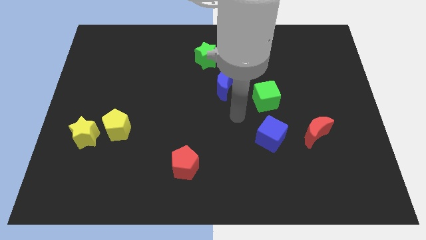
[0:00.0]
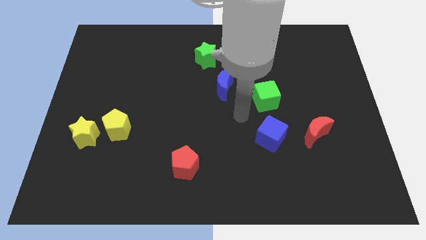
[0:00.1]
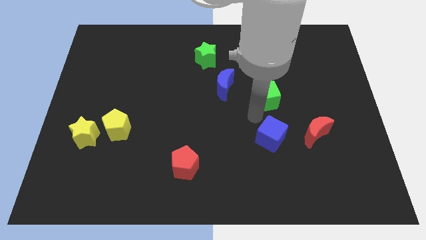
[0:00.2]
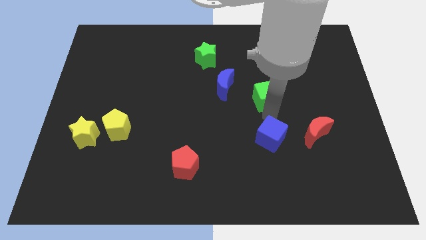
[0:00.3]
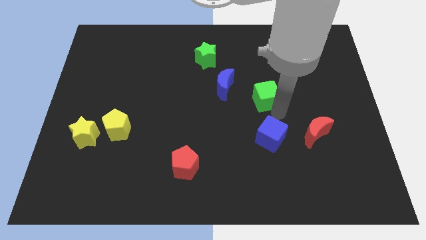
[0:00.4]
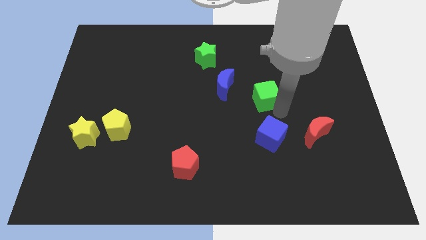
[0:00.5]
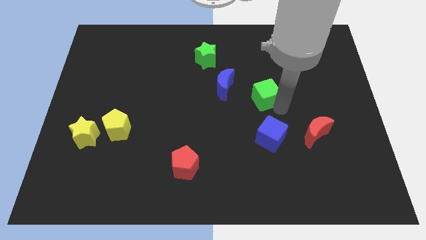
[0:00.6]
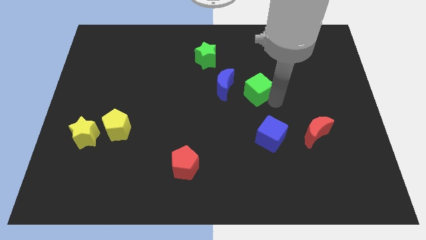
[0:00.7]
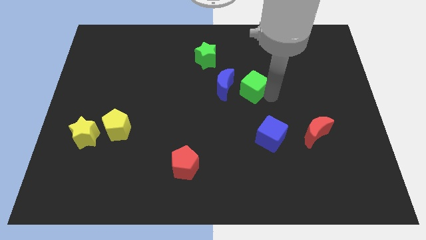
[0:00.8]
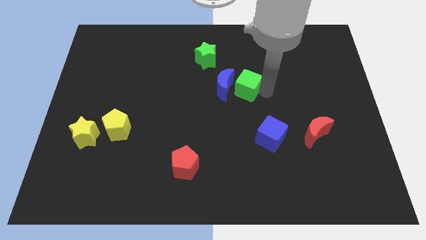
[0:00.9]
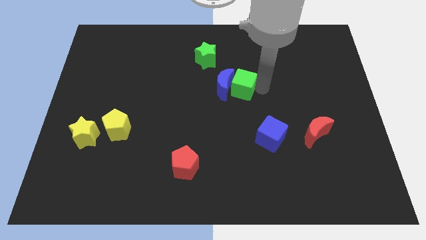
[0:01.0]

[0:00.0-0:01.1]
push the green cube into the blue crescent

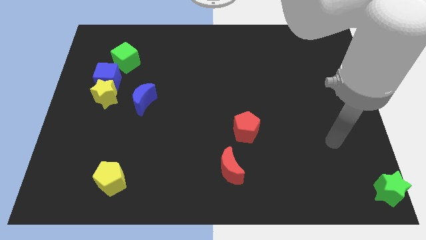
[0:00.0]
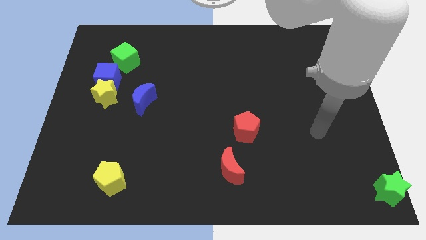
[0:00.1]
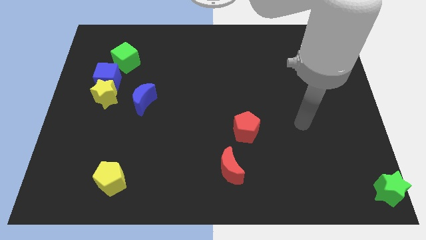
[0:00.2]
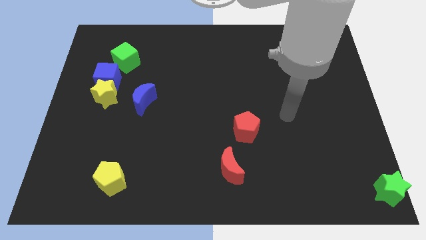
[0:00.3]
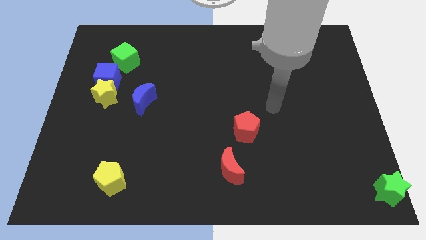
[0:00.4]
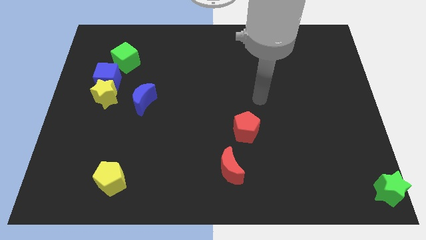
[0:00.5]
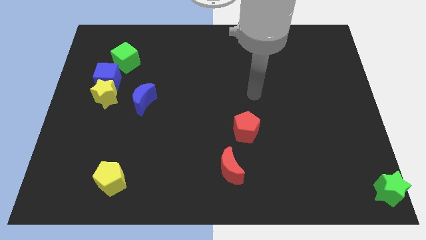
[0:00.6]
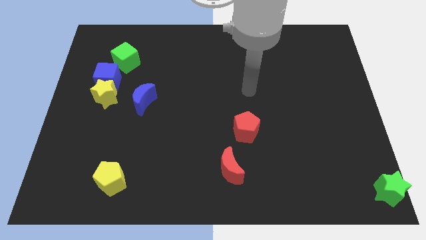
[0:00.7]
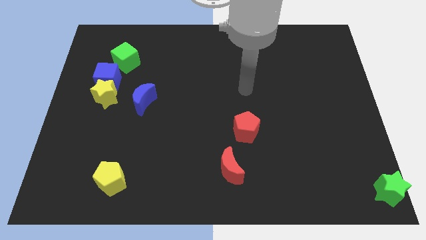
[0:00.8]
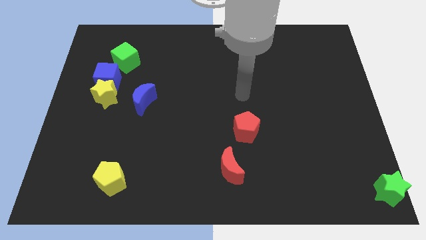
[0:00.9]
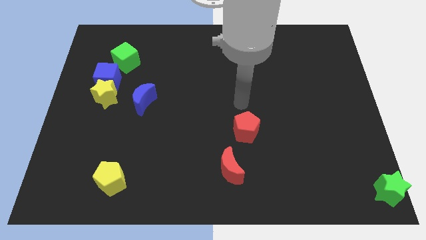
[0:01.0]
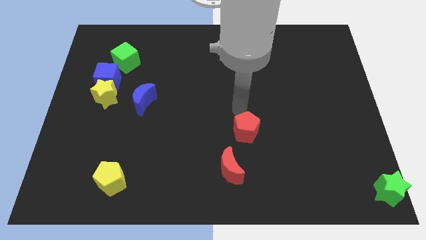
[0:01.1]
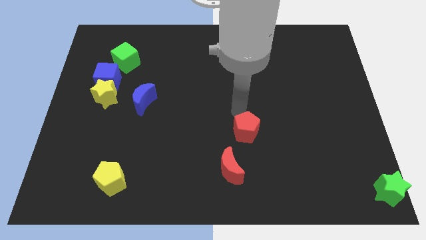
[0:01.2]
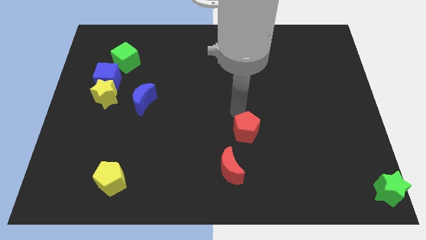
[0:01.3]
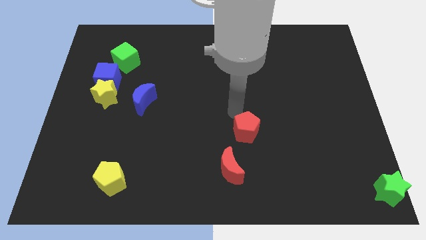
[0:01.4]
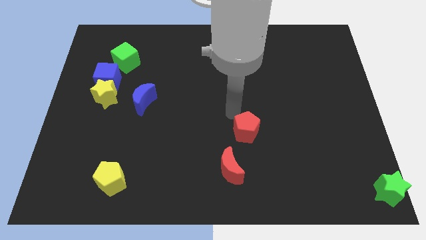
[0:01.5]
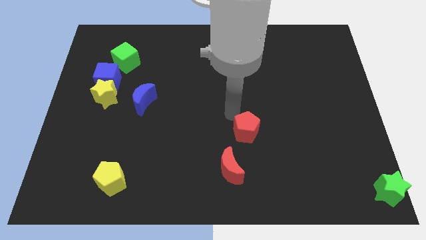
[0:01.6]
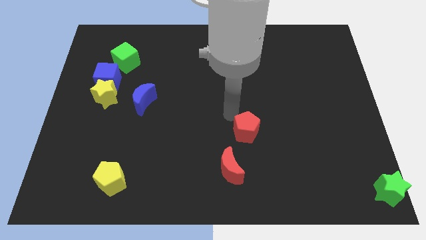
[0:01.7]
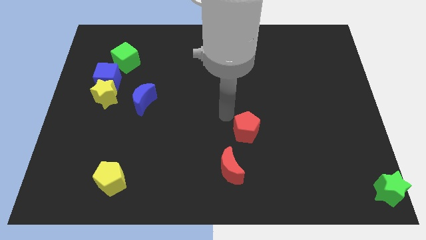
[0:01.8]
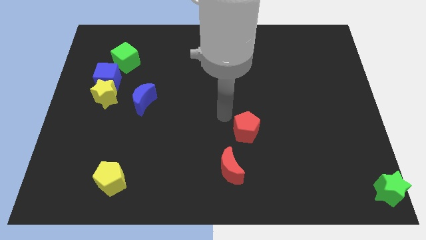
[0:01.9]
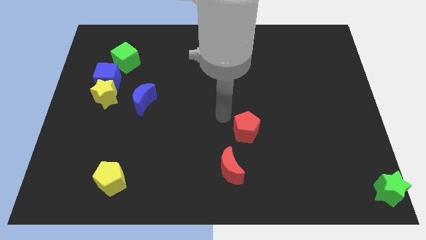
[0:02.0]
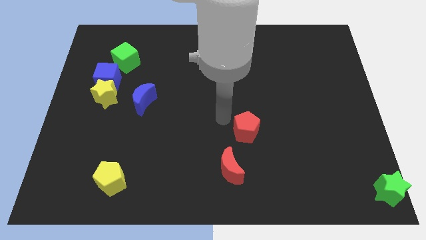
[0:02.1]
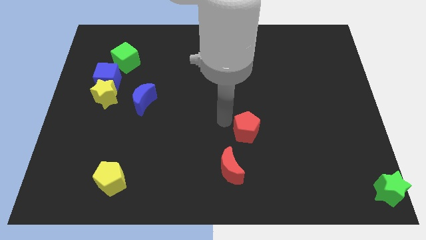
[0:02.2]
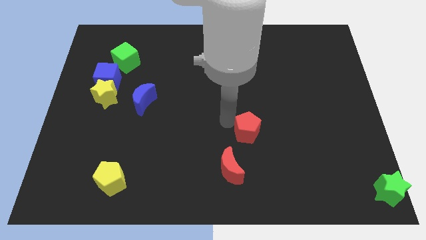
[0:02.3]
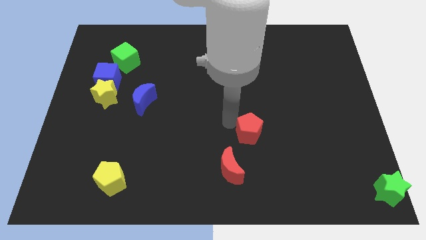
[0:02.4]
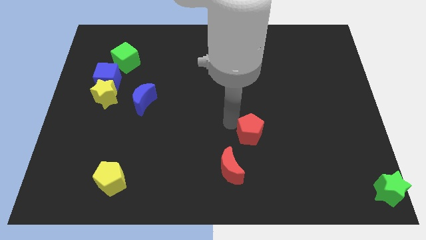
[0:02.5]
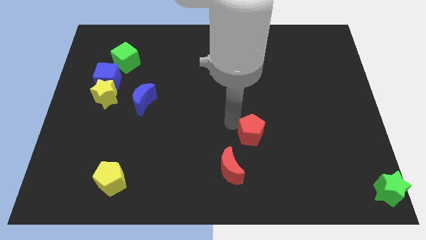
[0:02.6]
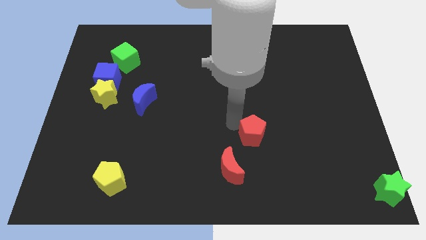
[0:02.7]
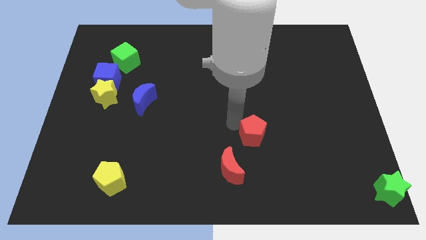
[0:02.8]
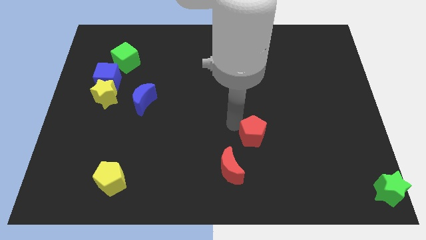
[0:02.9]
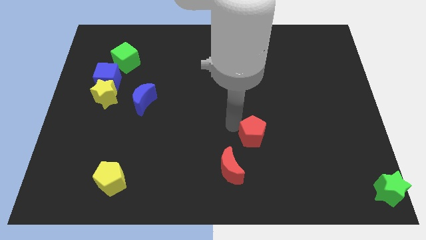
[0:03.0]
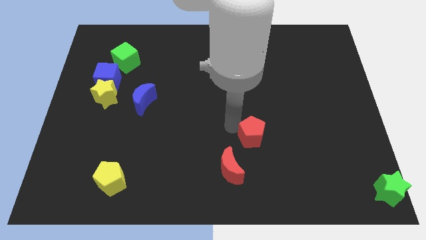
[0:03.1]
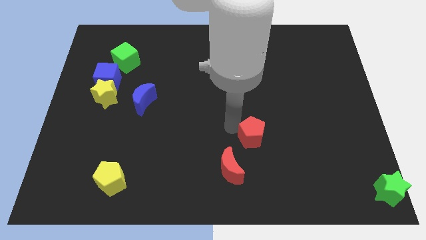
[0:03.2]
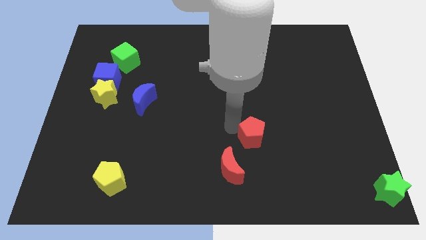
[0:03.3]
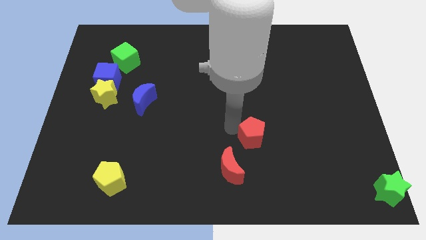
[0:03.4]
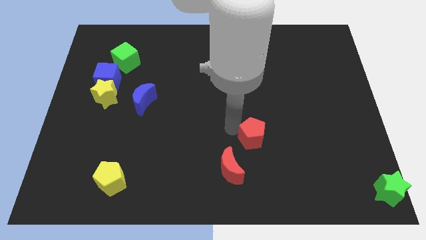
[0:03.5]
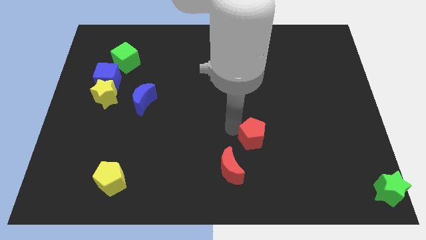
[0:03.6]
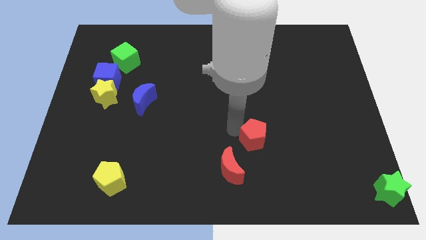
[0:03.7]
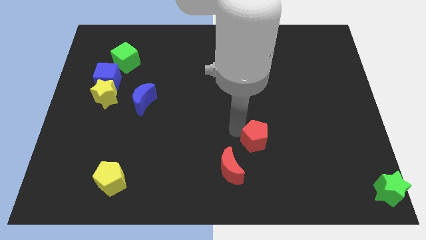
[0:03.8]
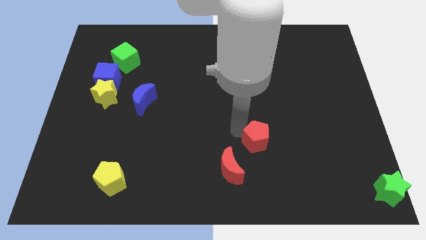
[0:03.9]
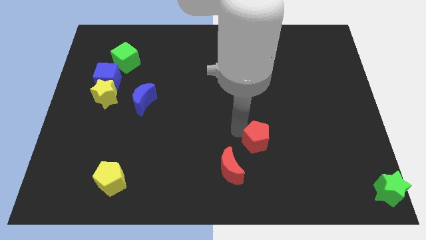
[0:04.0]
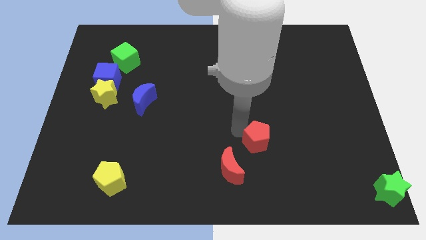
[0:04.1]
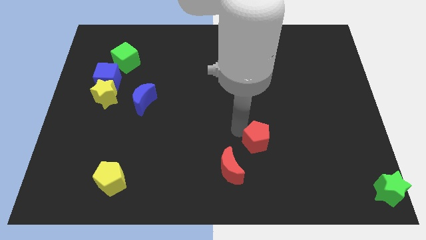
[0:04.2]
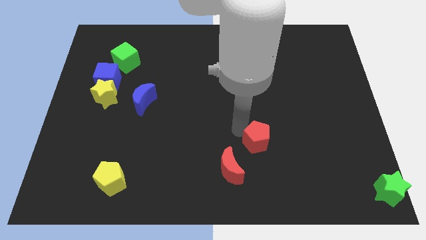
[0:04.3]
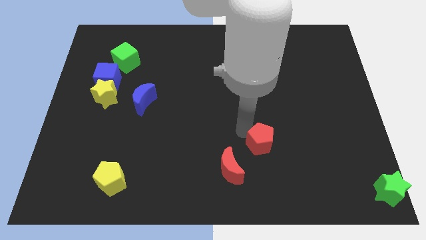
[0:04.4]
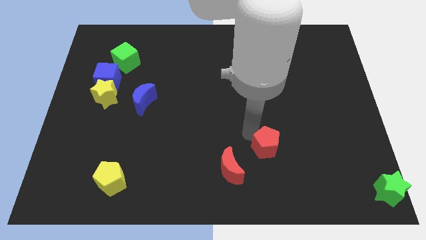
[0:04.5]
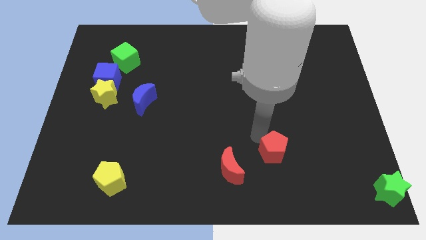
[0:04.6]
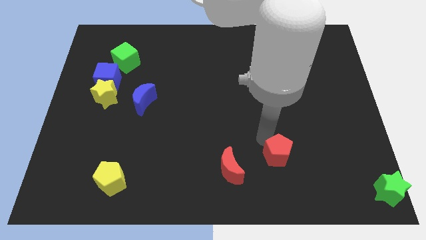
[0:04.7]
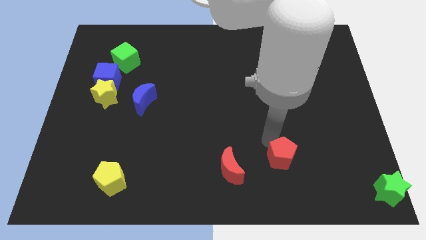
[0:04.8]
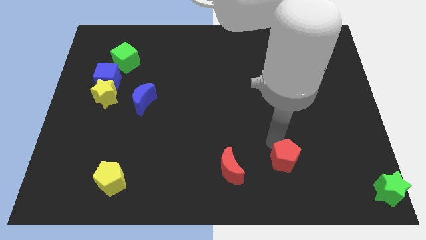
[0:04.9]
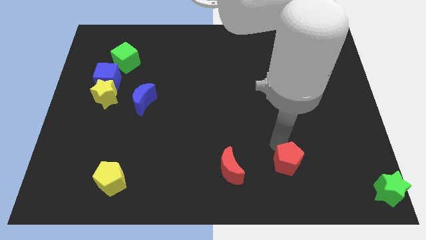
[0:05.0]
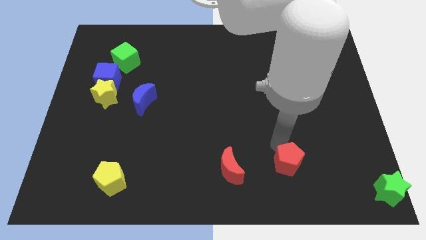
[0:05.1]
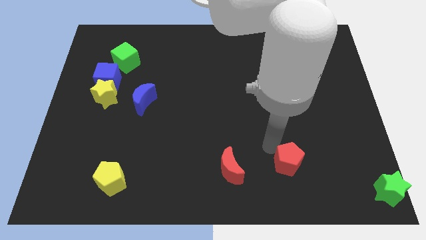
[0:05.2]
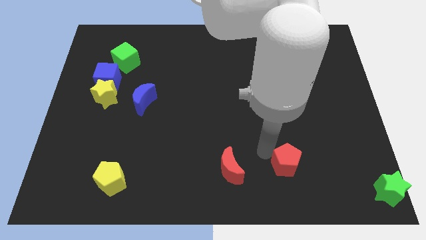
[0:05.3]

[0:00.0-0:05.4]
put the red pentagon to the right of the red crescent

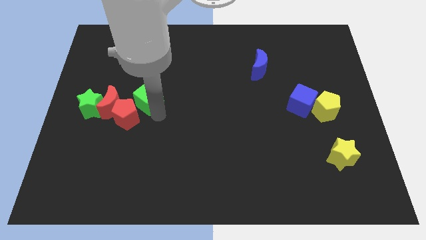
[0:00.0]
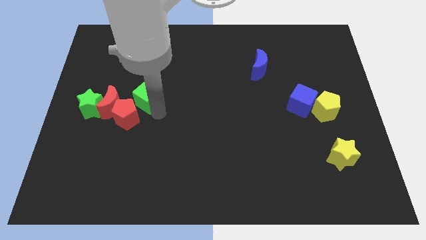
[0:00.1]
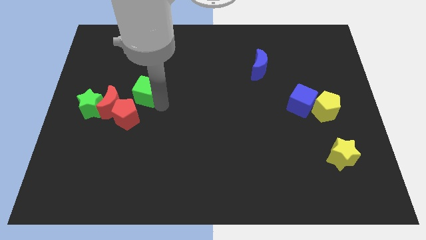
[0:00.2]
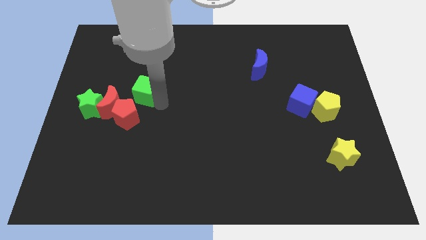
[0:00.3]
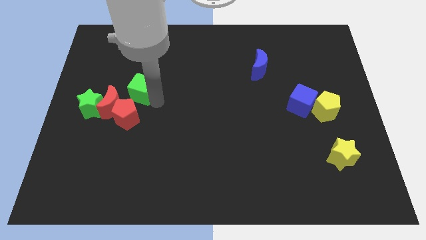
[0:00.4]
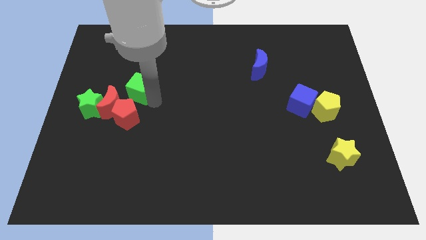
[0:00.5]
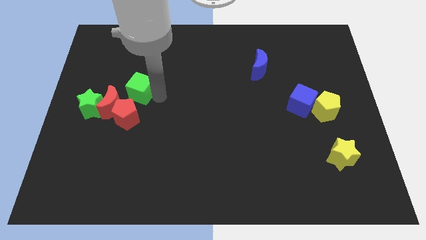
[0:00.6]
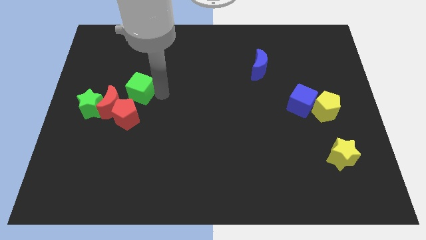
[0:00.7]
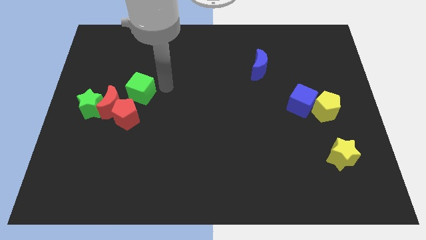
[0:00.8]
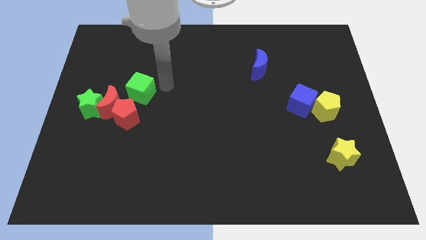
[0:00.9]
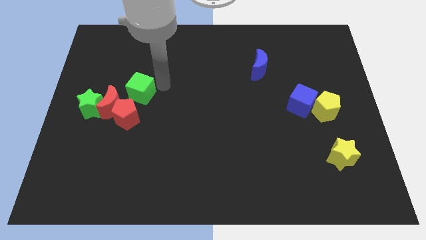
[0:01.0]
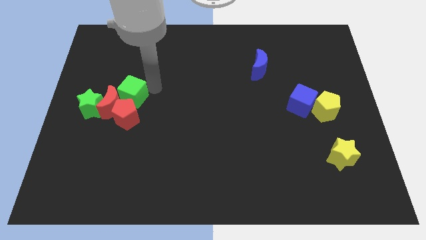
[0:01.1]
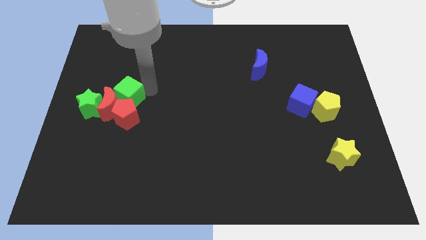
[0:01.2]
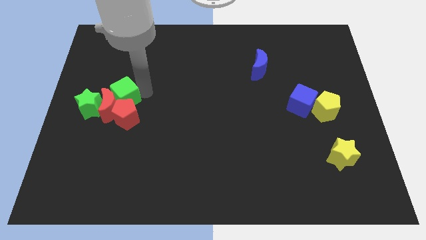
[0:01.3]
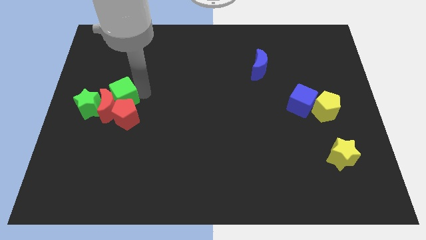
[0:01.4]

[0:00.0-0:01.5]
place green cube to the top of red pentagon

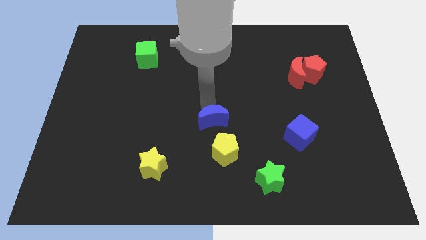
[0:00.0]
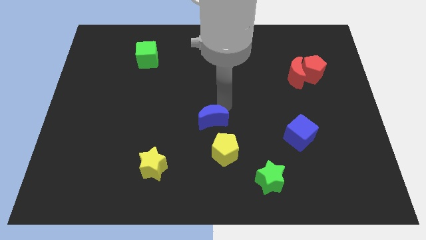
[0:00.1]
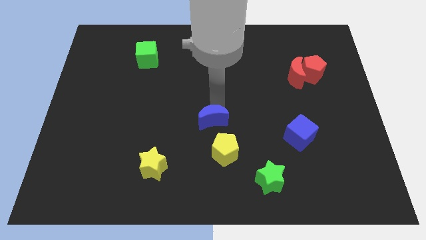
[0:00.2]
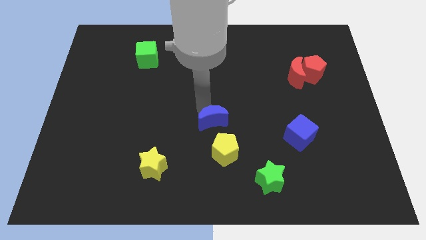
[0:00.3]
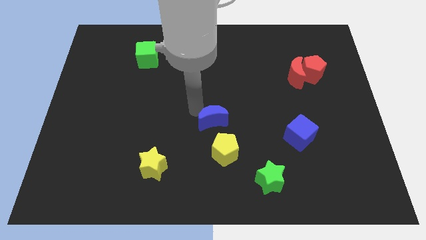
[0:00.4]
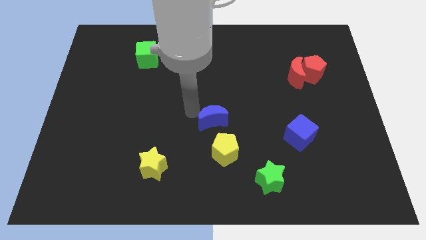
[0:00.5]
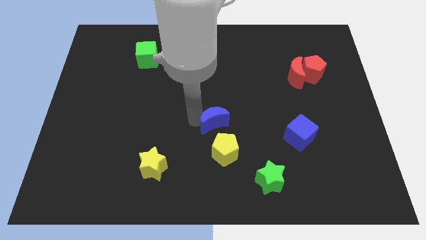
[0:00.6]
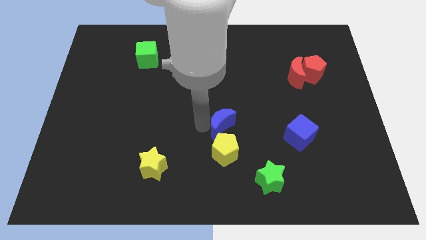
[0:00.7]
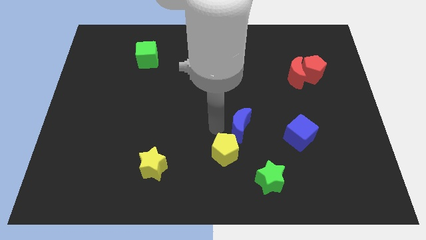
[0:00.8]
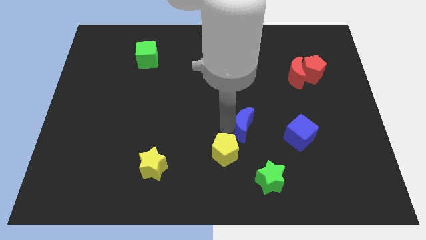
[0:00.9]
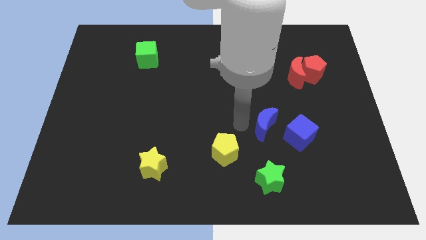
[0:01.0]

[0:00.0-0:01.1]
place the blue moon to the left of the blue cube
